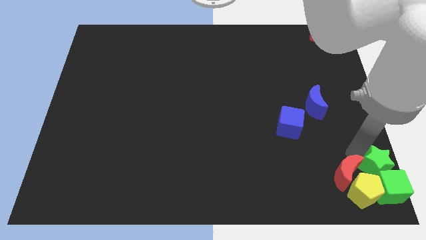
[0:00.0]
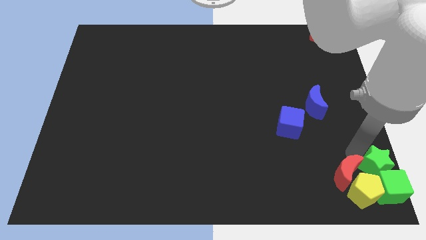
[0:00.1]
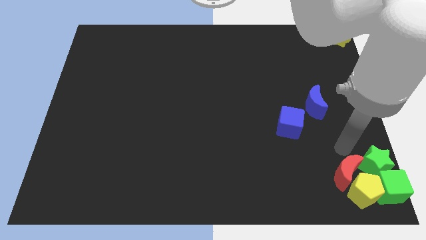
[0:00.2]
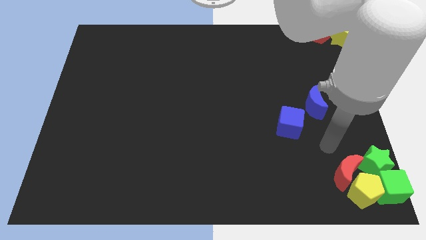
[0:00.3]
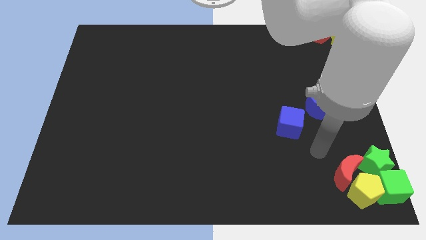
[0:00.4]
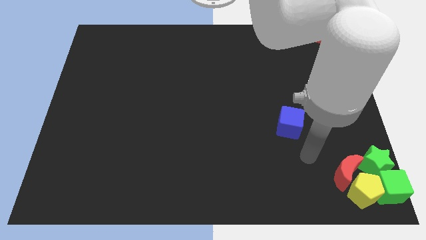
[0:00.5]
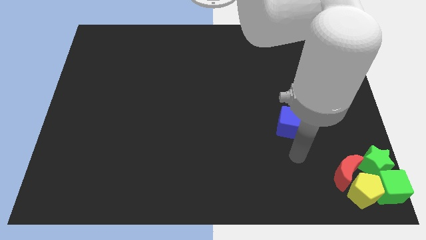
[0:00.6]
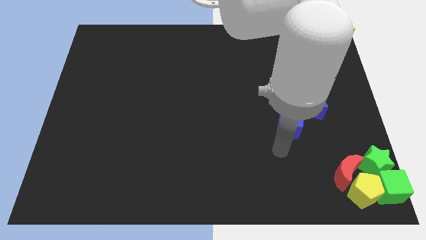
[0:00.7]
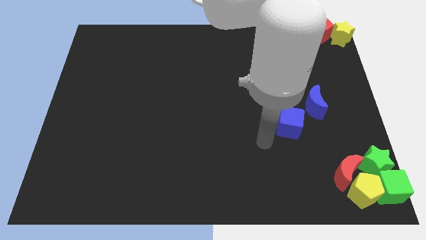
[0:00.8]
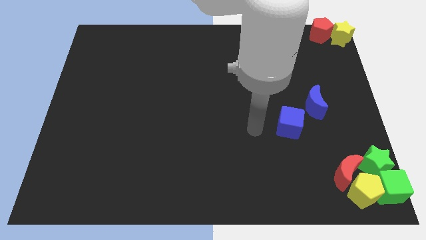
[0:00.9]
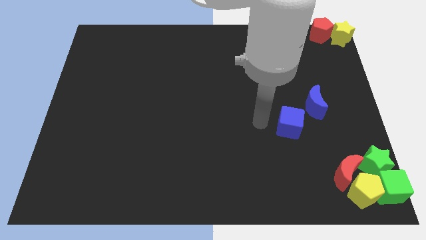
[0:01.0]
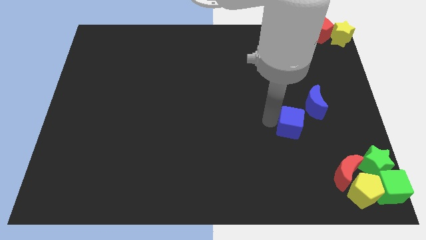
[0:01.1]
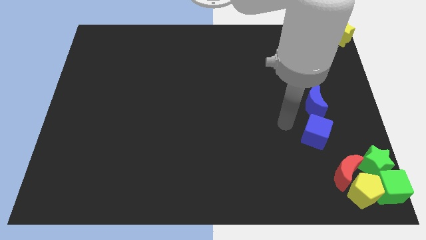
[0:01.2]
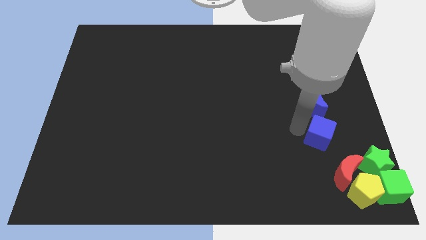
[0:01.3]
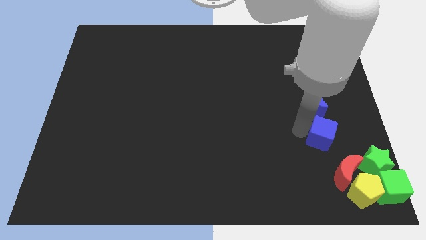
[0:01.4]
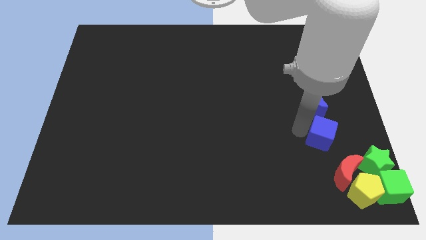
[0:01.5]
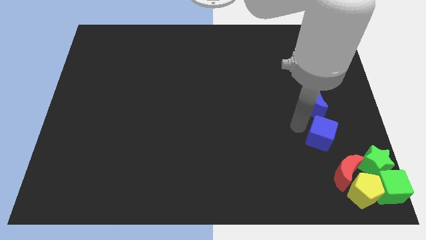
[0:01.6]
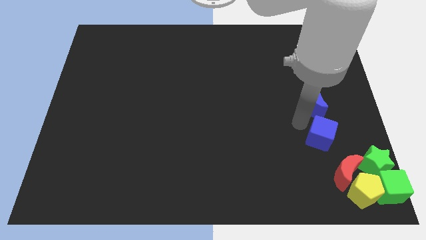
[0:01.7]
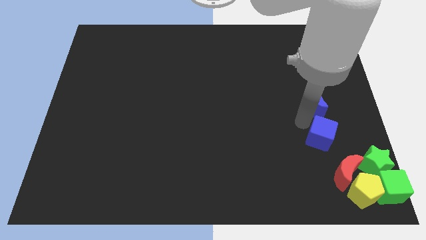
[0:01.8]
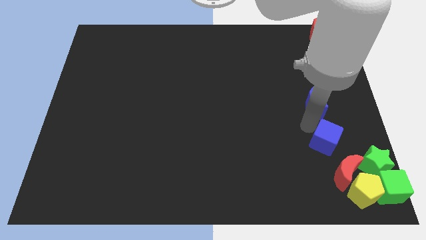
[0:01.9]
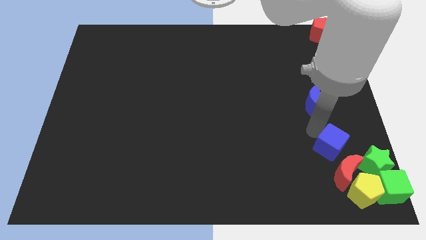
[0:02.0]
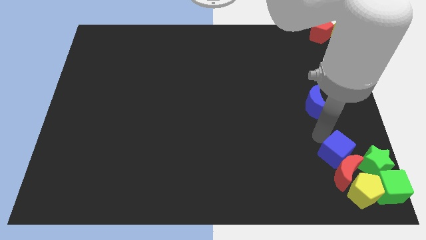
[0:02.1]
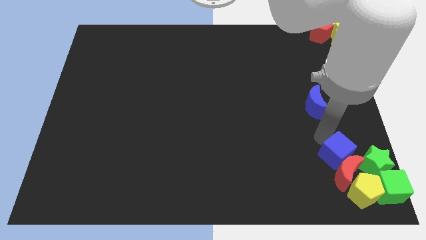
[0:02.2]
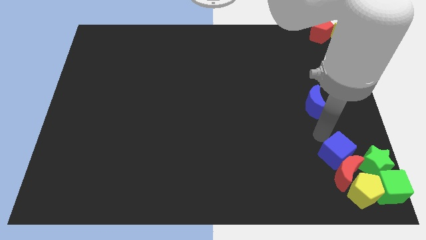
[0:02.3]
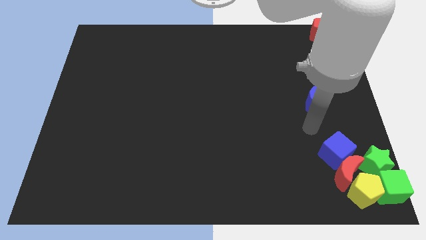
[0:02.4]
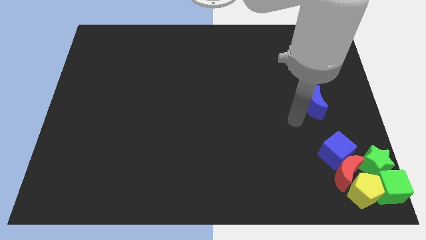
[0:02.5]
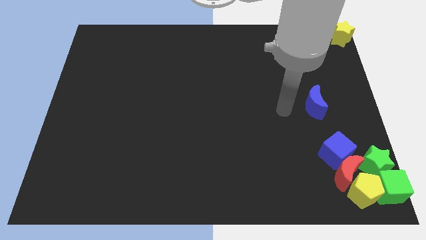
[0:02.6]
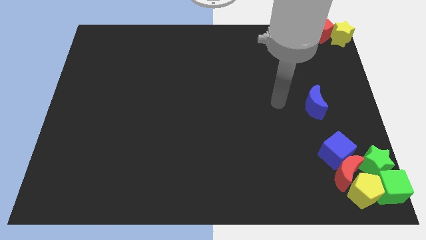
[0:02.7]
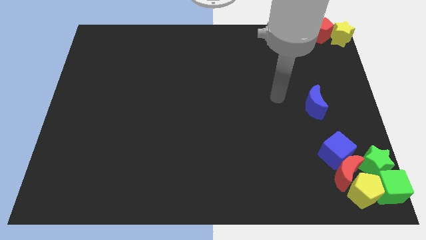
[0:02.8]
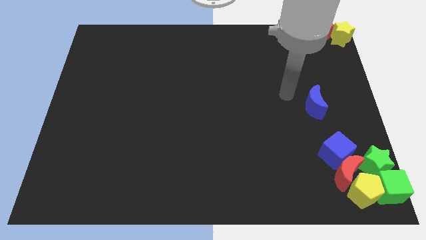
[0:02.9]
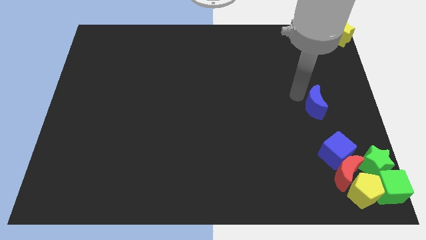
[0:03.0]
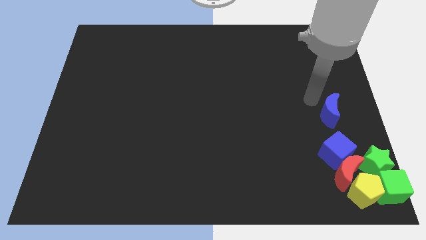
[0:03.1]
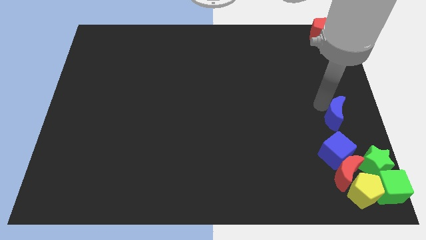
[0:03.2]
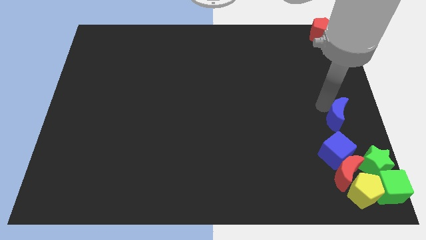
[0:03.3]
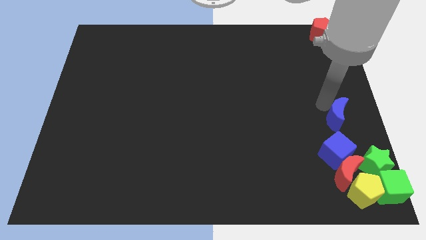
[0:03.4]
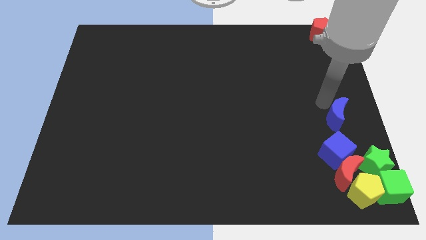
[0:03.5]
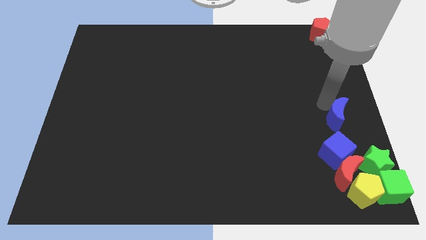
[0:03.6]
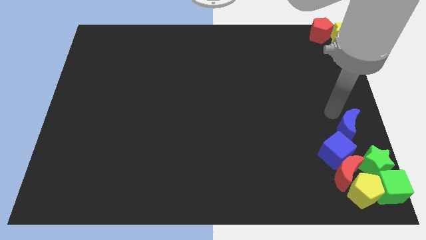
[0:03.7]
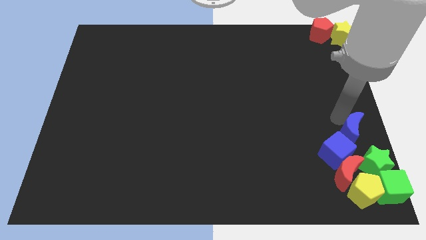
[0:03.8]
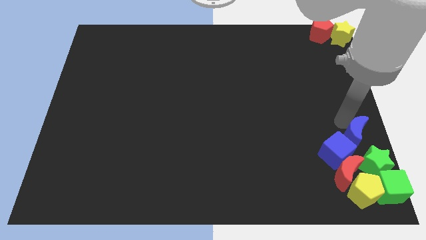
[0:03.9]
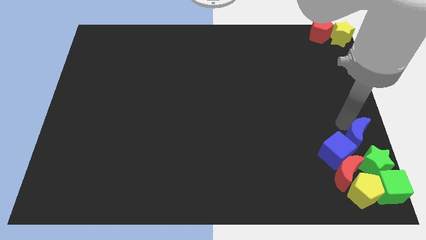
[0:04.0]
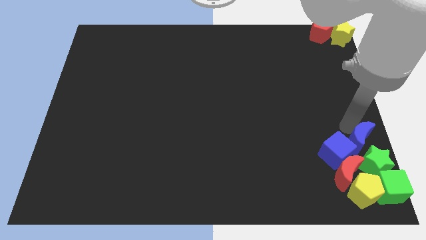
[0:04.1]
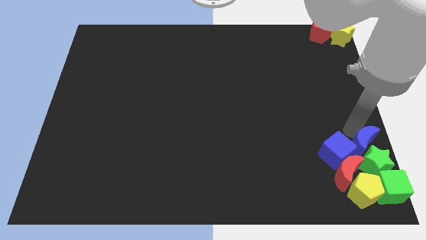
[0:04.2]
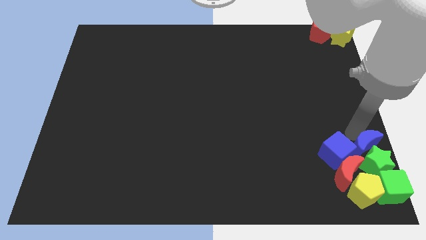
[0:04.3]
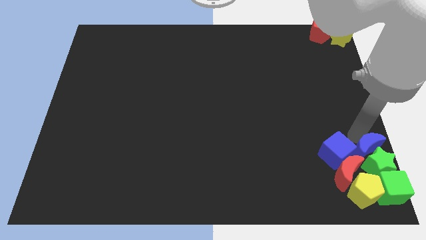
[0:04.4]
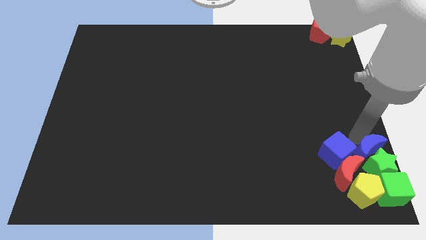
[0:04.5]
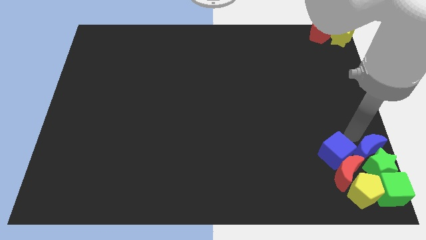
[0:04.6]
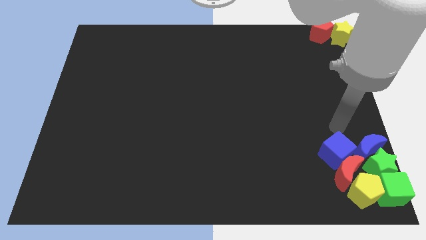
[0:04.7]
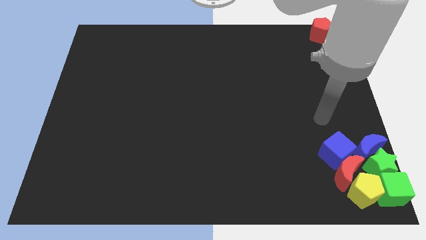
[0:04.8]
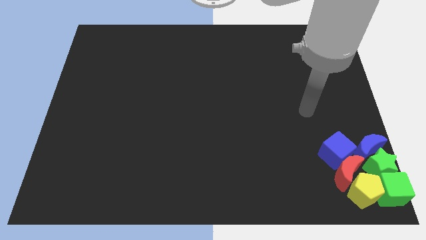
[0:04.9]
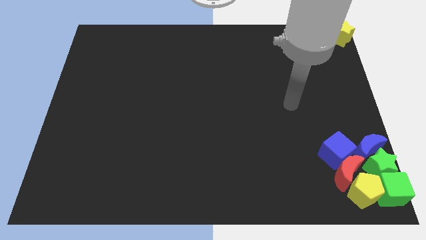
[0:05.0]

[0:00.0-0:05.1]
move the blue cube towards the bottom right of the board

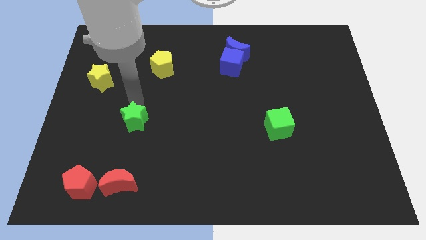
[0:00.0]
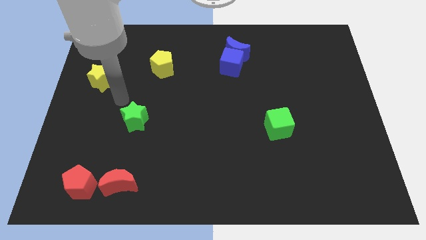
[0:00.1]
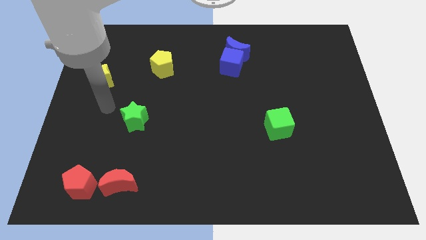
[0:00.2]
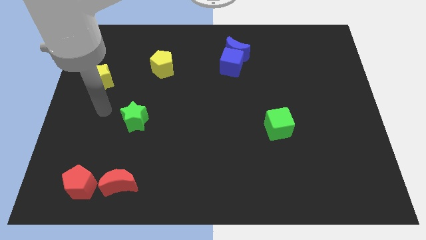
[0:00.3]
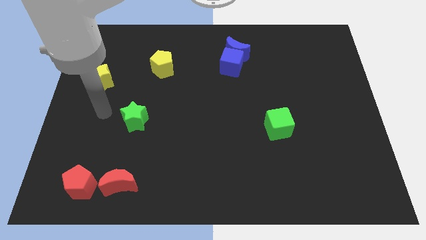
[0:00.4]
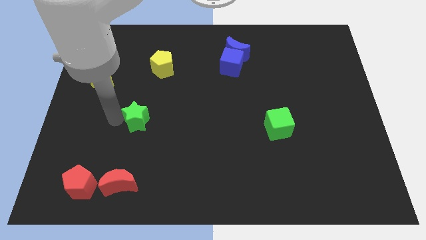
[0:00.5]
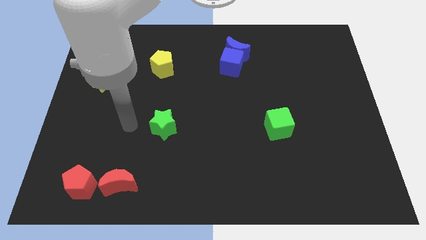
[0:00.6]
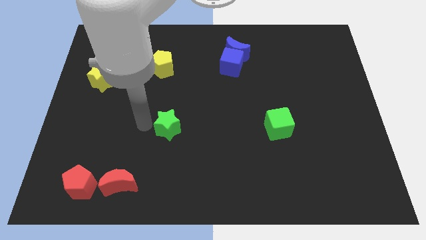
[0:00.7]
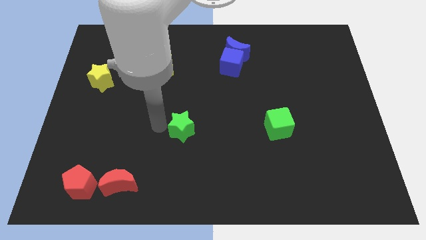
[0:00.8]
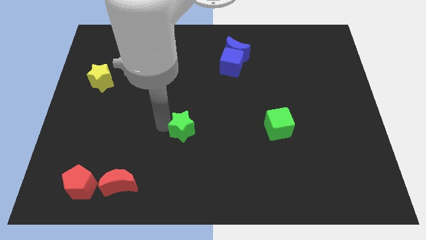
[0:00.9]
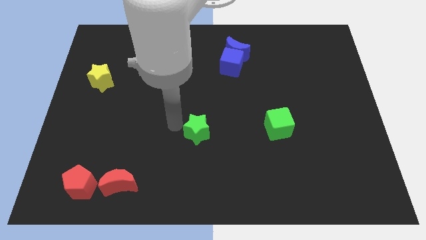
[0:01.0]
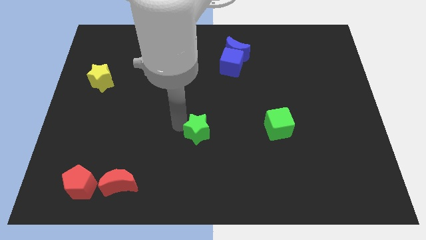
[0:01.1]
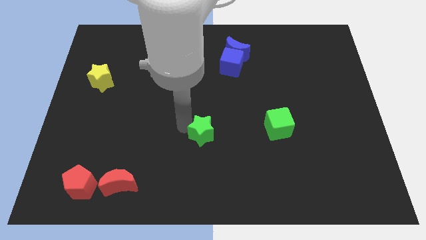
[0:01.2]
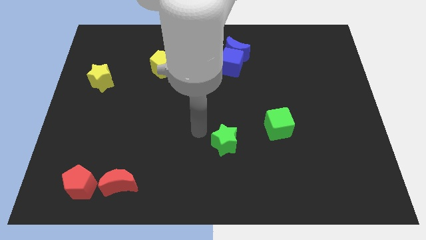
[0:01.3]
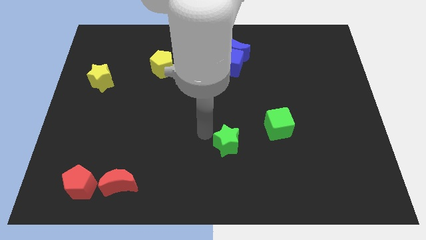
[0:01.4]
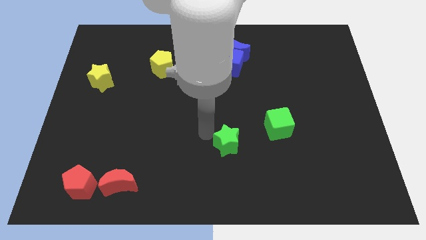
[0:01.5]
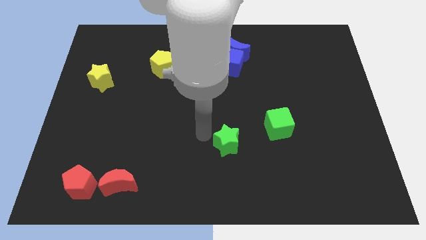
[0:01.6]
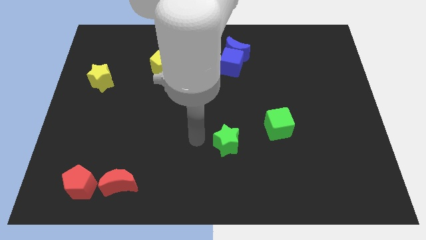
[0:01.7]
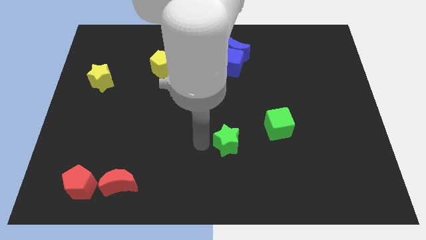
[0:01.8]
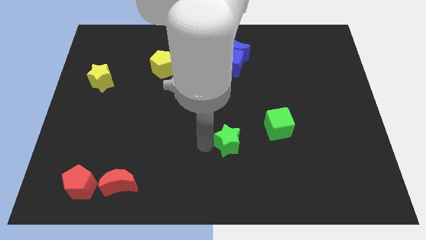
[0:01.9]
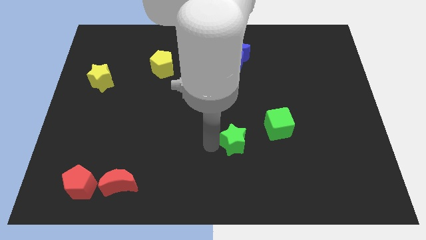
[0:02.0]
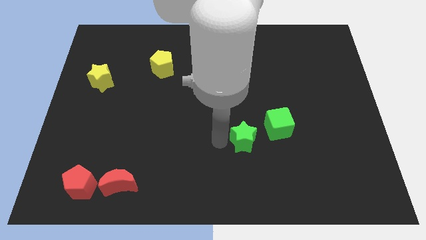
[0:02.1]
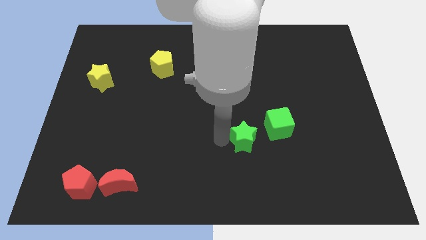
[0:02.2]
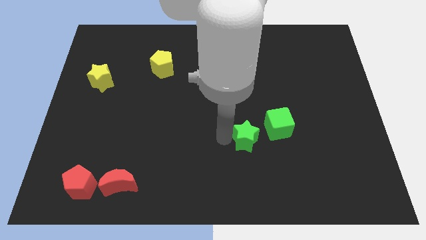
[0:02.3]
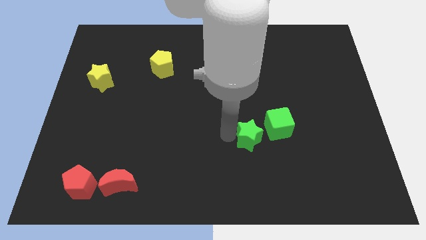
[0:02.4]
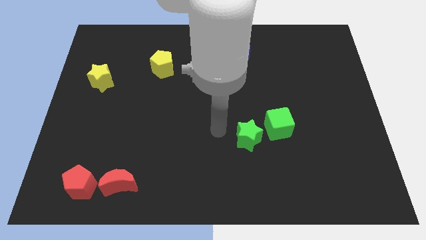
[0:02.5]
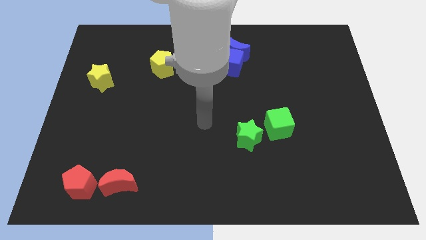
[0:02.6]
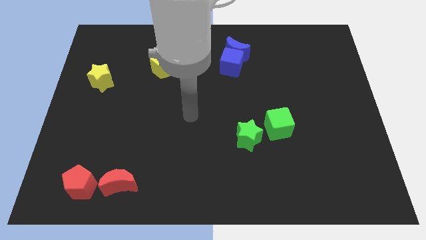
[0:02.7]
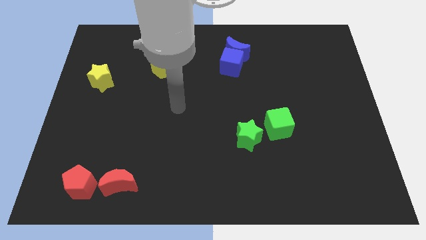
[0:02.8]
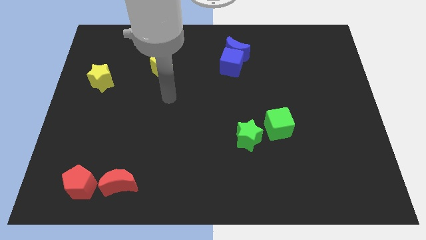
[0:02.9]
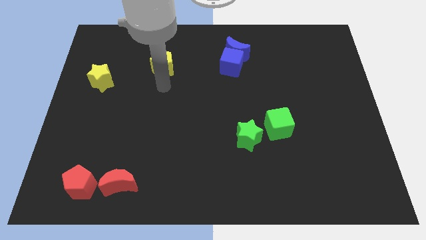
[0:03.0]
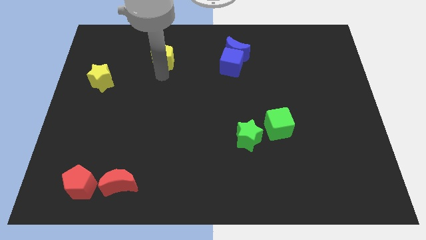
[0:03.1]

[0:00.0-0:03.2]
slide green star into green cube

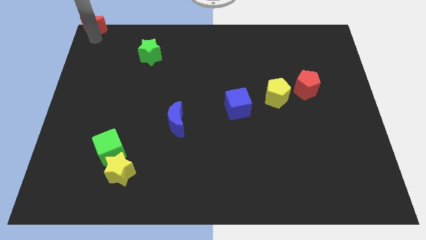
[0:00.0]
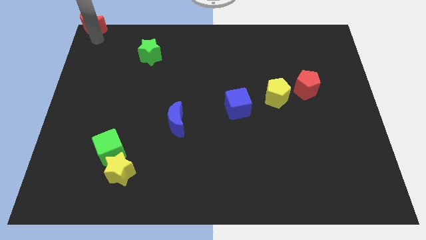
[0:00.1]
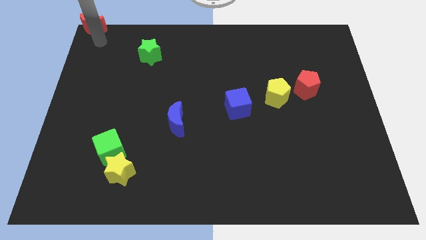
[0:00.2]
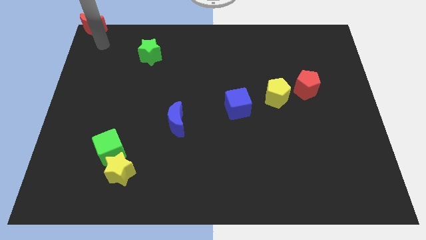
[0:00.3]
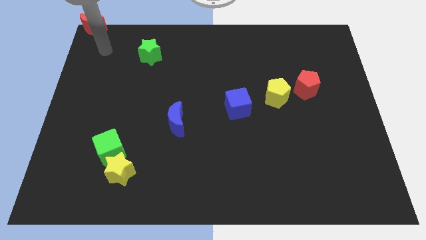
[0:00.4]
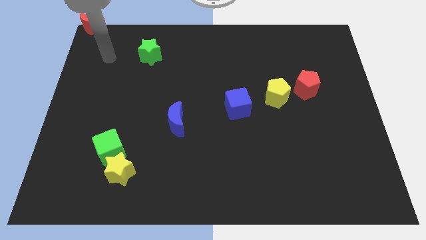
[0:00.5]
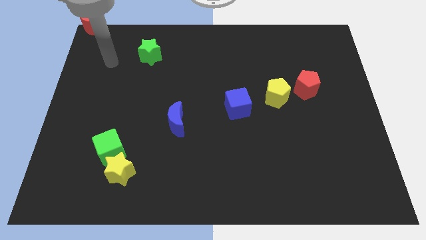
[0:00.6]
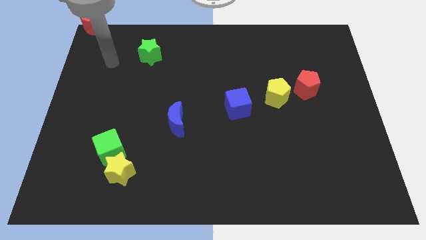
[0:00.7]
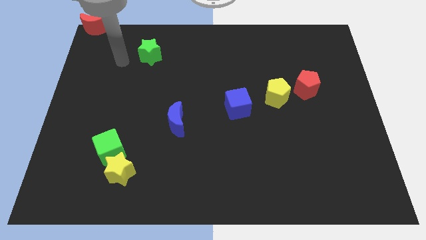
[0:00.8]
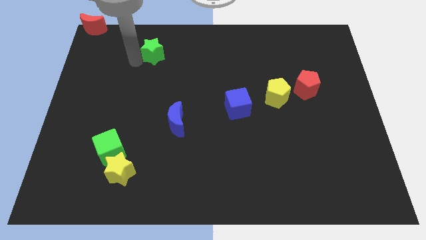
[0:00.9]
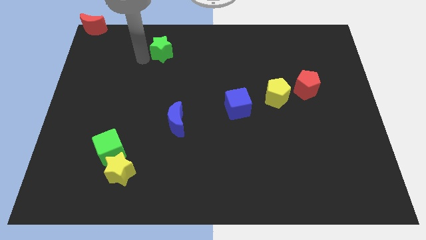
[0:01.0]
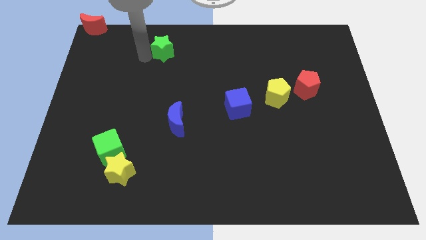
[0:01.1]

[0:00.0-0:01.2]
place the arm left to the green star
